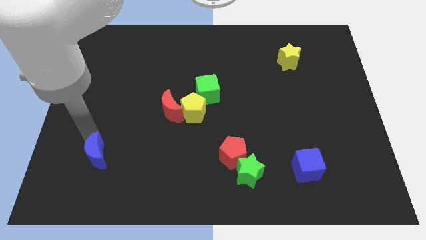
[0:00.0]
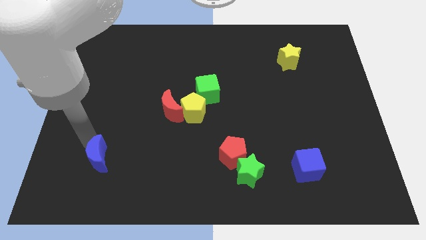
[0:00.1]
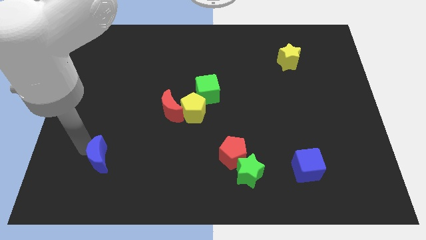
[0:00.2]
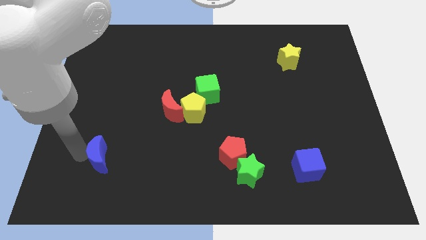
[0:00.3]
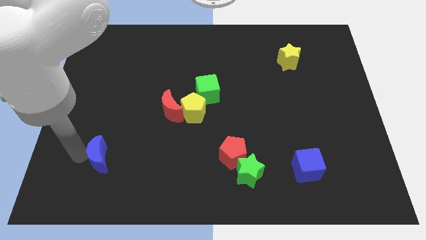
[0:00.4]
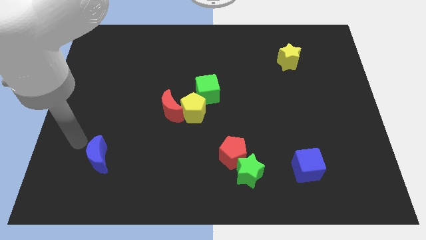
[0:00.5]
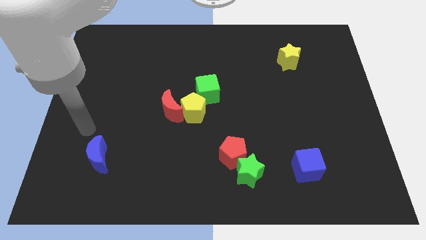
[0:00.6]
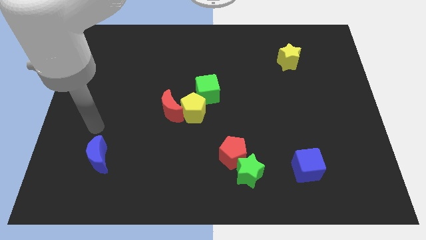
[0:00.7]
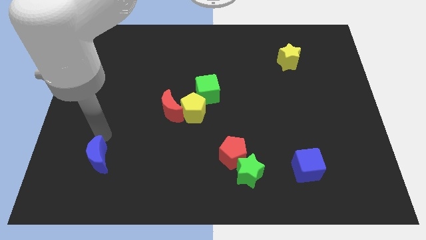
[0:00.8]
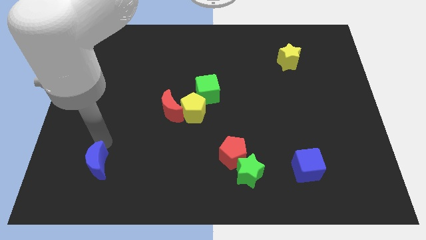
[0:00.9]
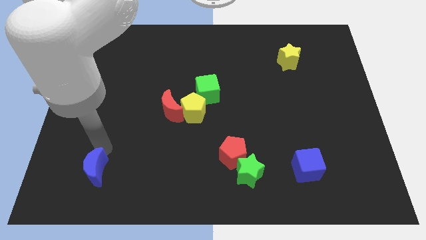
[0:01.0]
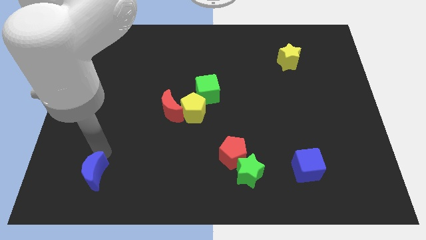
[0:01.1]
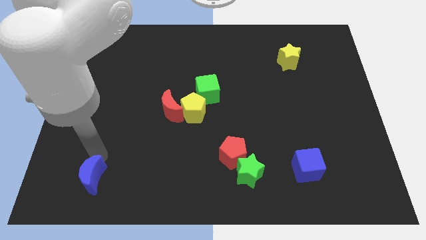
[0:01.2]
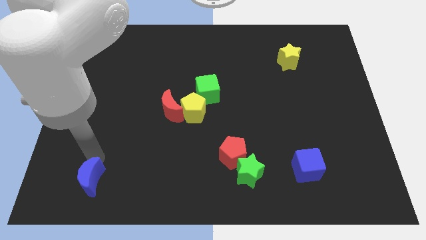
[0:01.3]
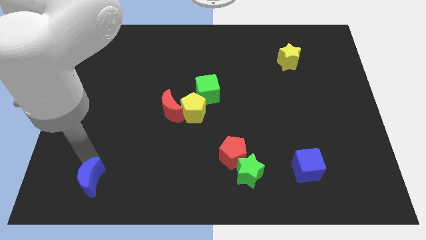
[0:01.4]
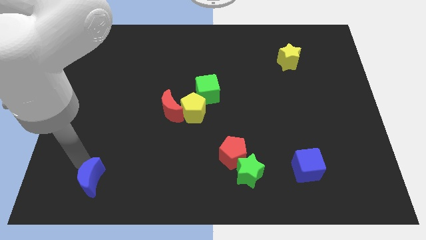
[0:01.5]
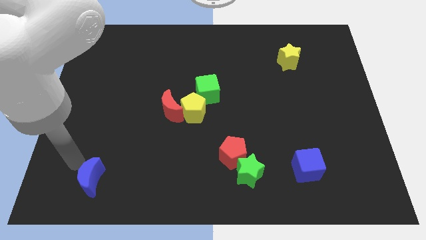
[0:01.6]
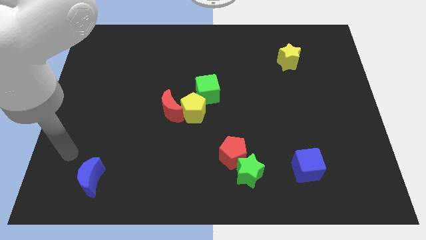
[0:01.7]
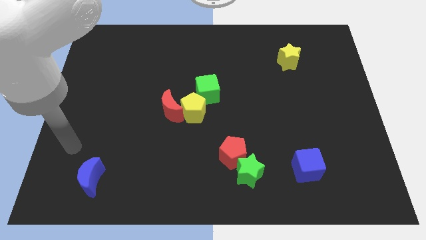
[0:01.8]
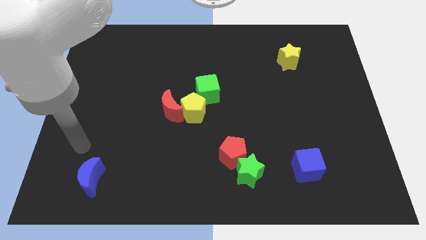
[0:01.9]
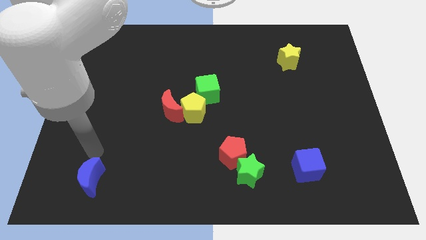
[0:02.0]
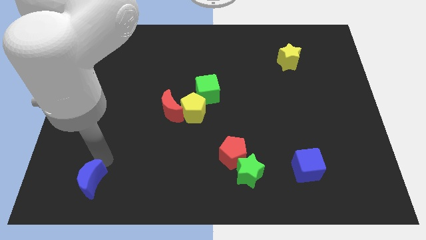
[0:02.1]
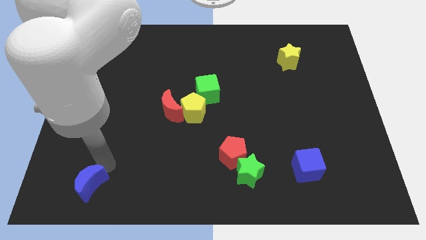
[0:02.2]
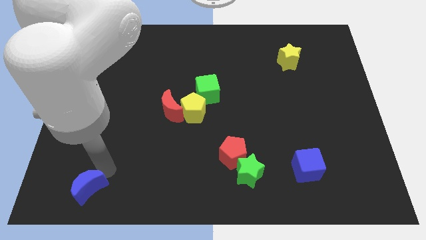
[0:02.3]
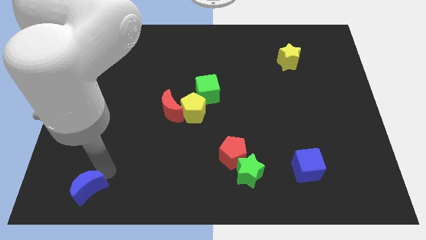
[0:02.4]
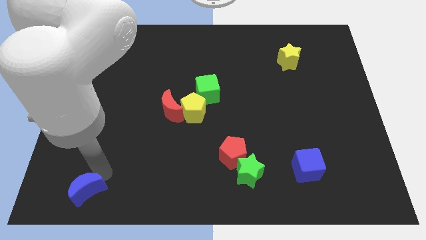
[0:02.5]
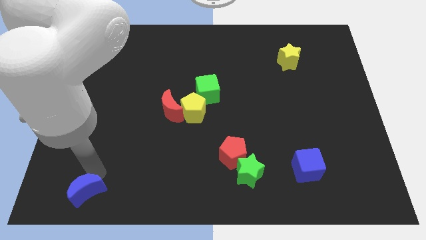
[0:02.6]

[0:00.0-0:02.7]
move the blue moon at the bottom left side

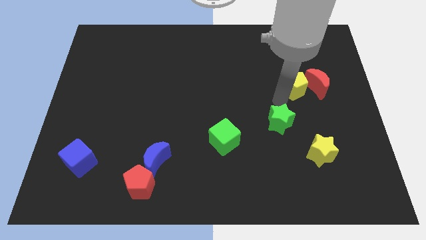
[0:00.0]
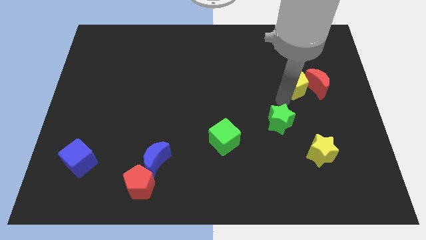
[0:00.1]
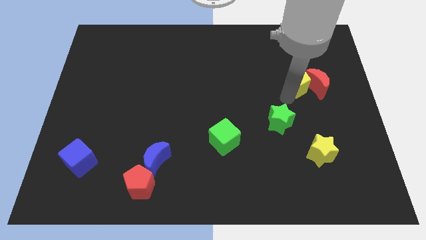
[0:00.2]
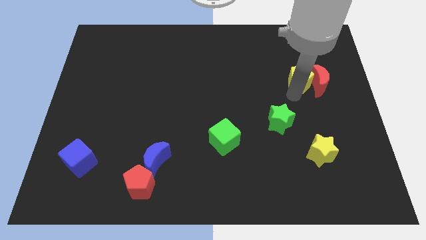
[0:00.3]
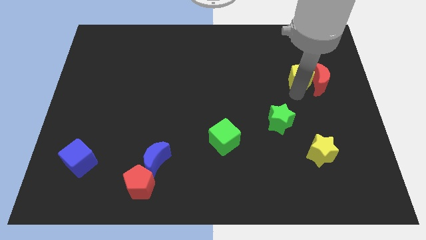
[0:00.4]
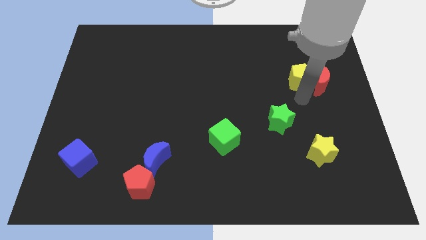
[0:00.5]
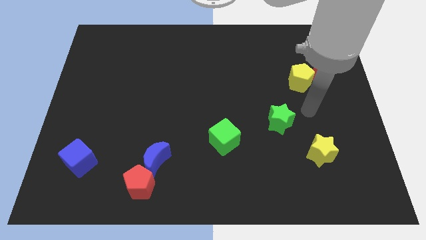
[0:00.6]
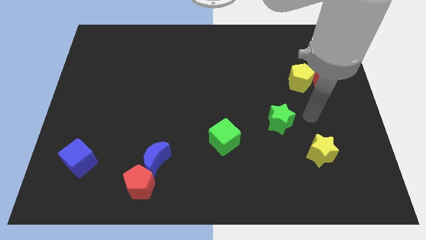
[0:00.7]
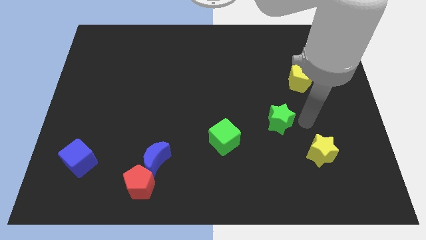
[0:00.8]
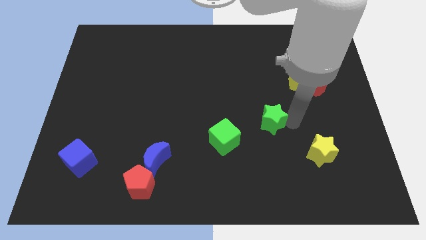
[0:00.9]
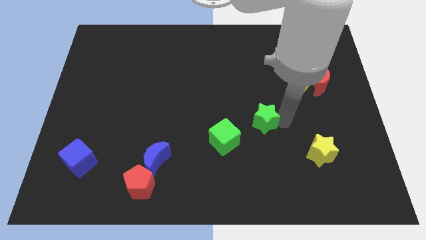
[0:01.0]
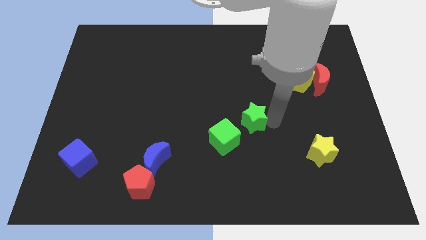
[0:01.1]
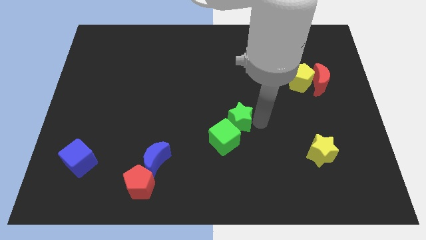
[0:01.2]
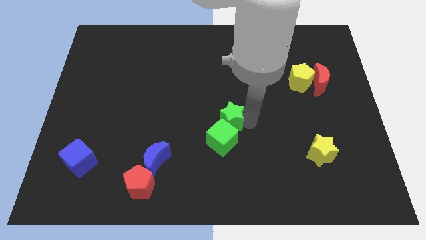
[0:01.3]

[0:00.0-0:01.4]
push the green star into green cube

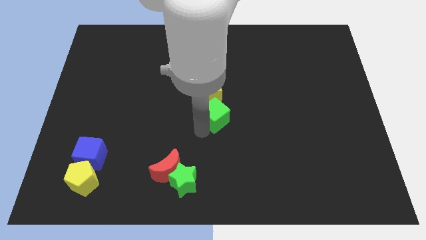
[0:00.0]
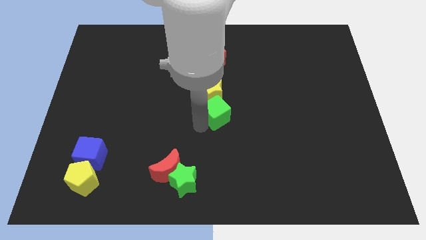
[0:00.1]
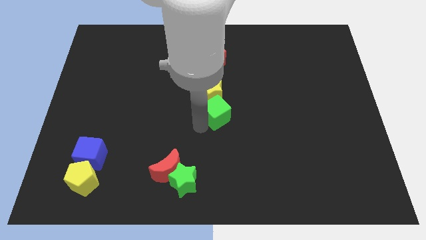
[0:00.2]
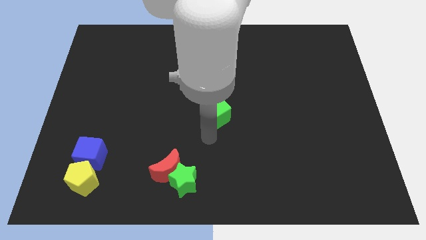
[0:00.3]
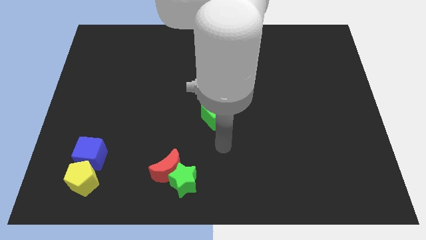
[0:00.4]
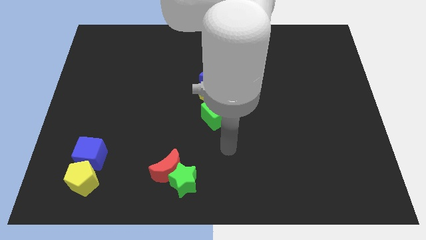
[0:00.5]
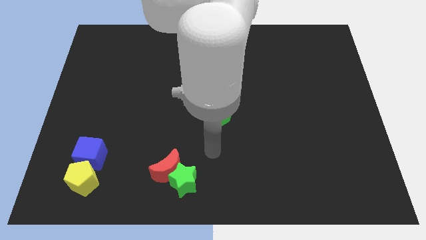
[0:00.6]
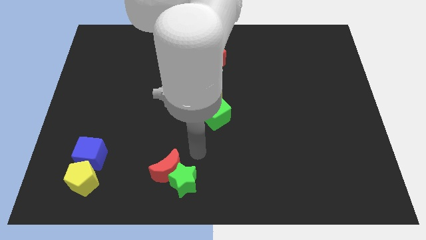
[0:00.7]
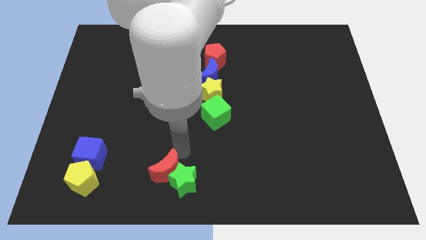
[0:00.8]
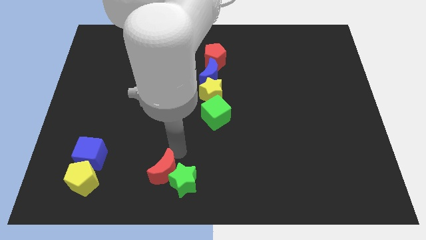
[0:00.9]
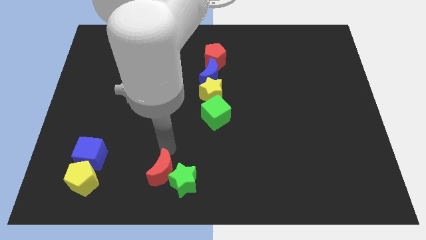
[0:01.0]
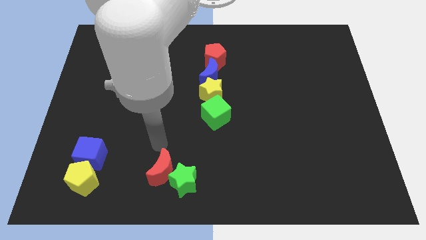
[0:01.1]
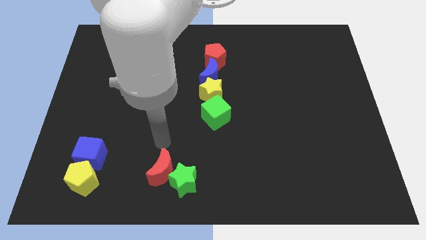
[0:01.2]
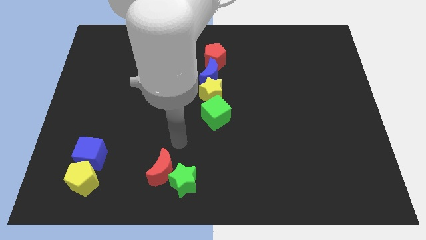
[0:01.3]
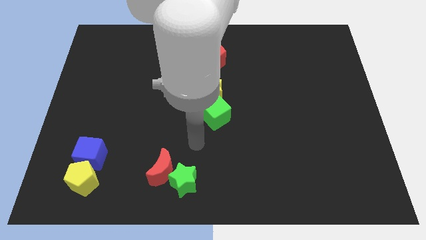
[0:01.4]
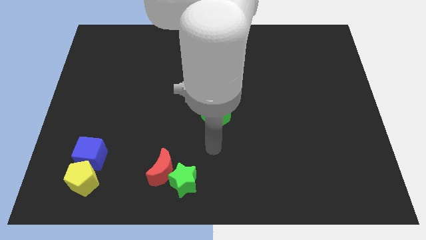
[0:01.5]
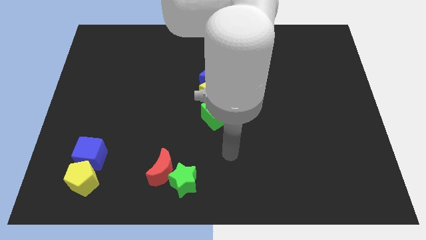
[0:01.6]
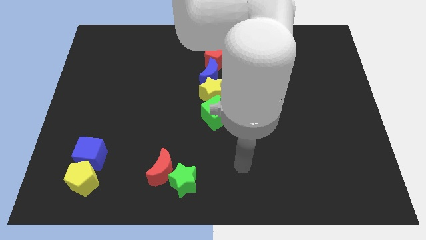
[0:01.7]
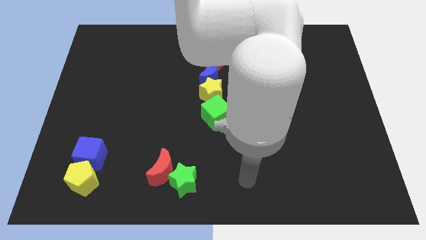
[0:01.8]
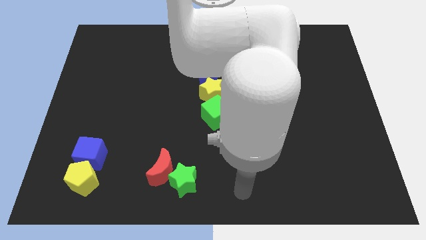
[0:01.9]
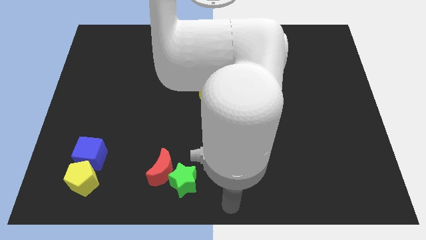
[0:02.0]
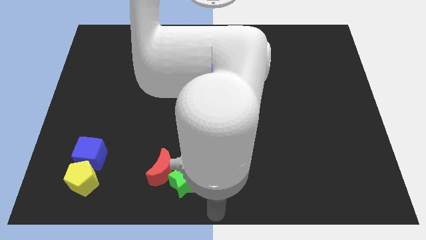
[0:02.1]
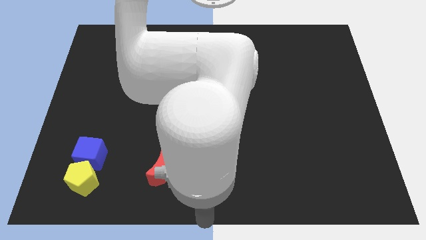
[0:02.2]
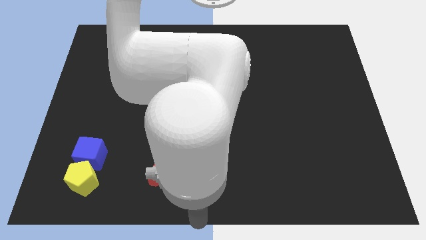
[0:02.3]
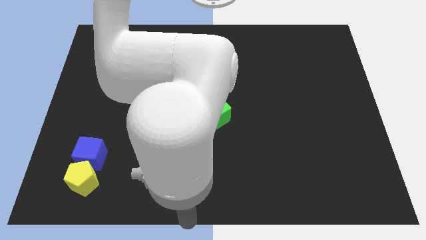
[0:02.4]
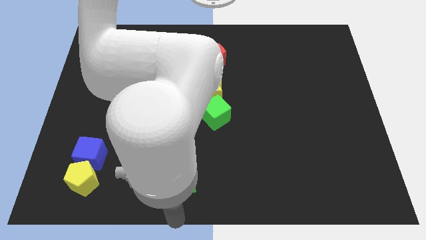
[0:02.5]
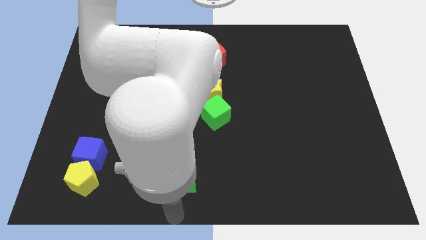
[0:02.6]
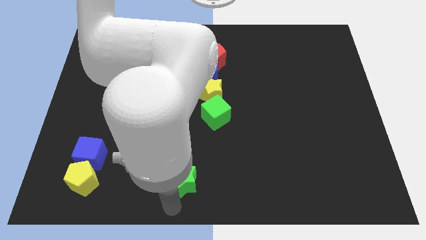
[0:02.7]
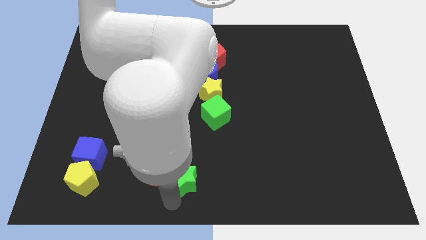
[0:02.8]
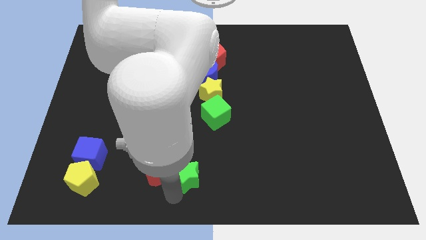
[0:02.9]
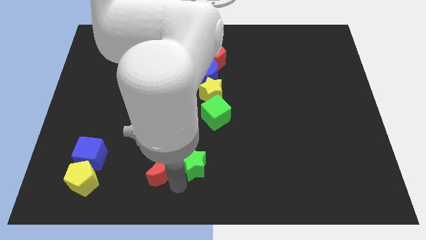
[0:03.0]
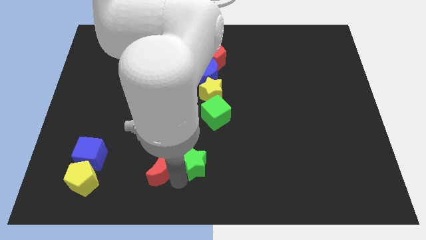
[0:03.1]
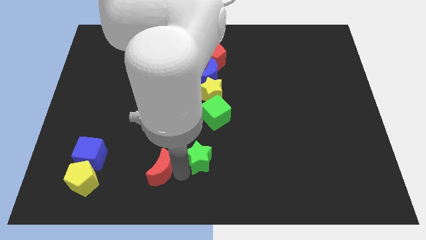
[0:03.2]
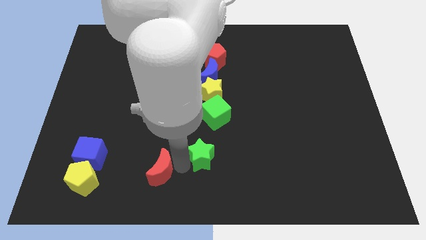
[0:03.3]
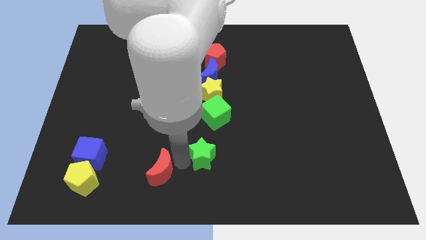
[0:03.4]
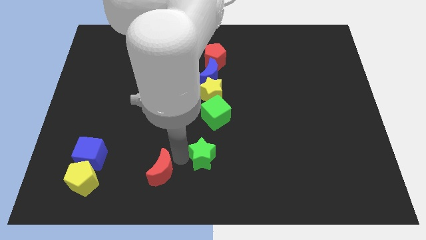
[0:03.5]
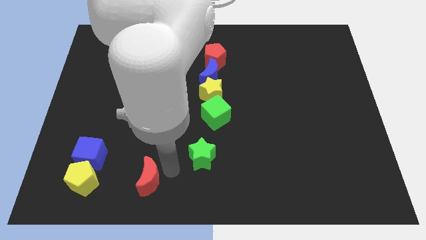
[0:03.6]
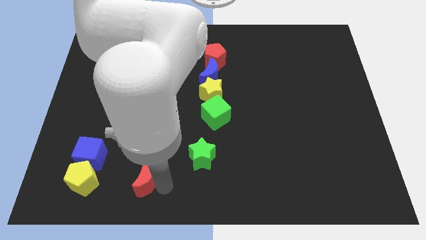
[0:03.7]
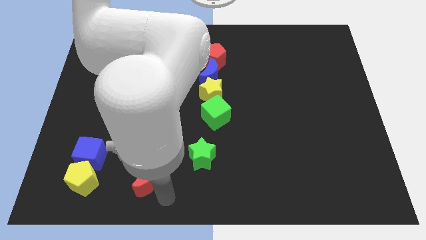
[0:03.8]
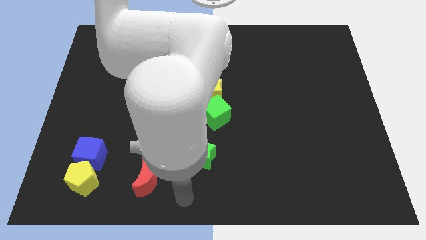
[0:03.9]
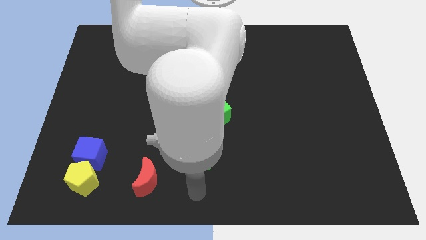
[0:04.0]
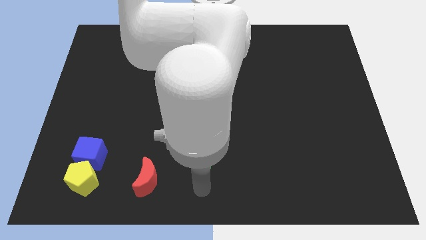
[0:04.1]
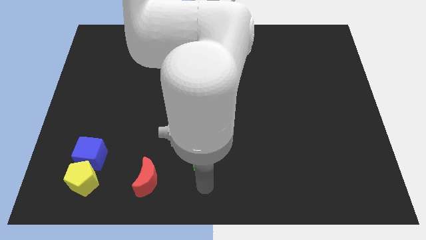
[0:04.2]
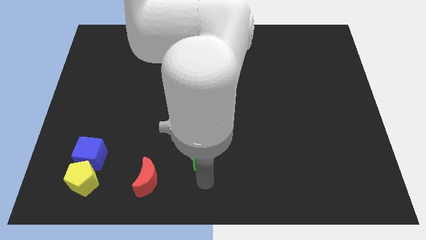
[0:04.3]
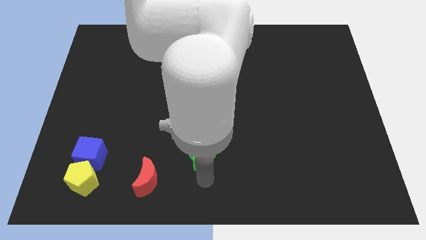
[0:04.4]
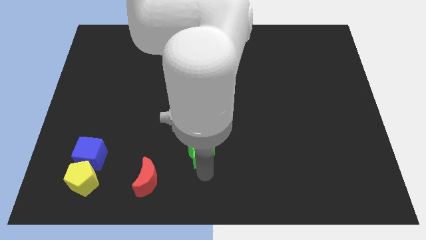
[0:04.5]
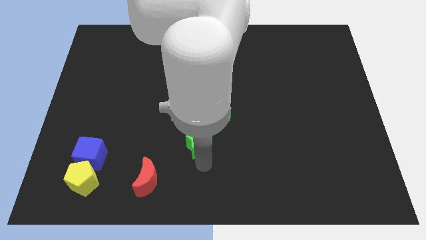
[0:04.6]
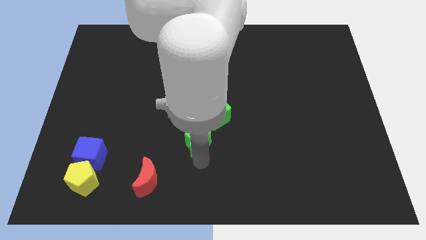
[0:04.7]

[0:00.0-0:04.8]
move green star to the bottom of green cube

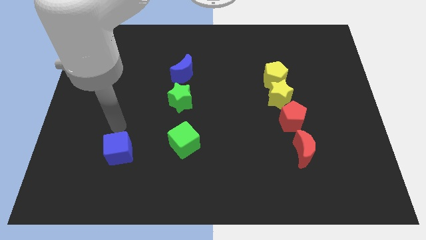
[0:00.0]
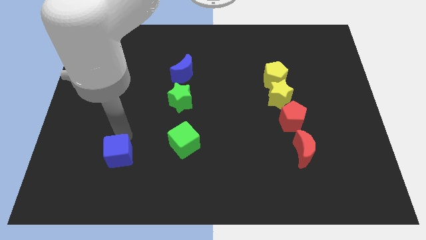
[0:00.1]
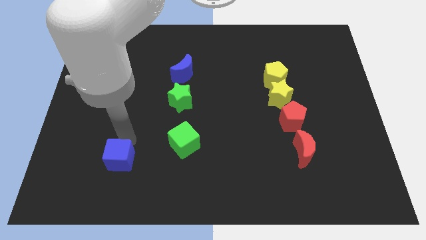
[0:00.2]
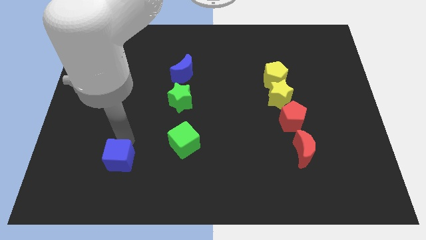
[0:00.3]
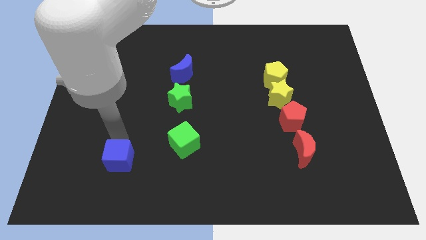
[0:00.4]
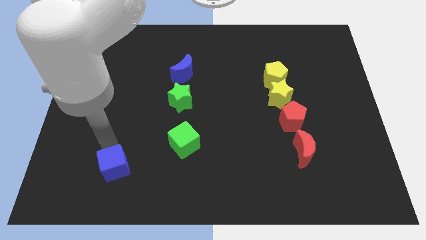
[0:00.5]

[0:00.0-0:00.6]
slightly push the blue cube downwards
